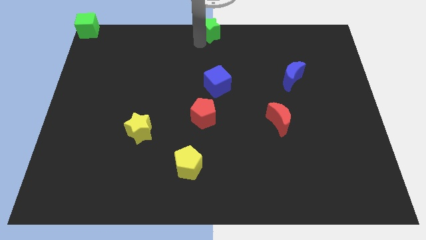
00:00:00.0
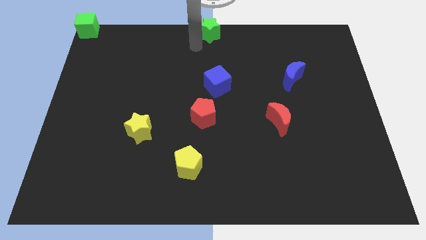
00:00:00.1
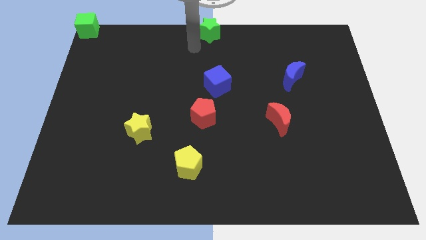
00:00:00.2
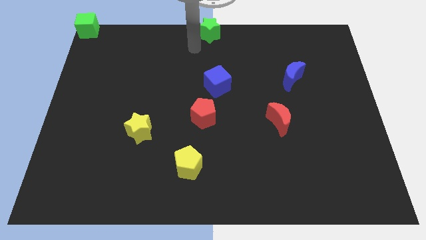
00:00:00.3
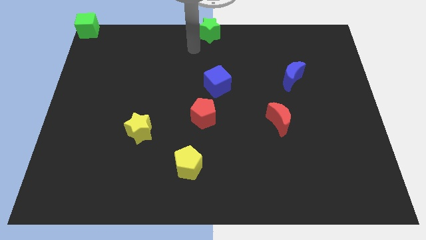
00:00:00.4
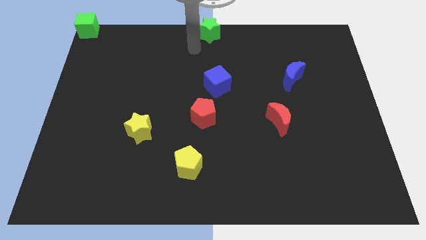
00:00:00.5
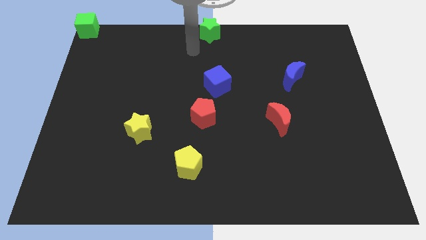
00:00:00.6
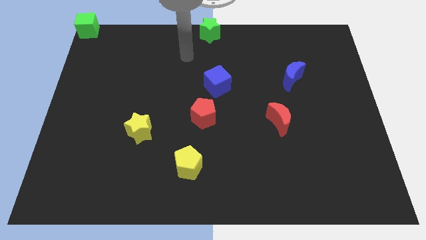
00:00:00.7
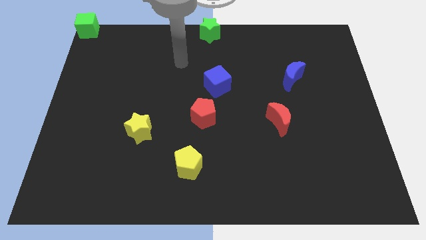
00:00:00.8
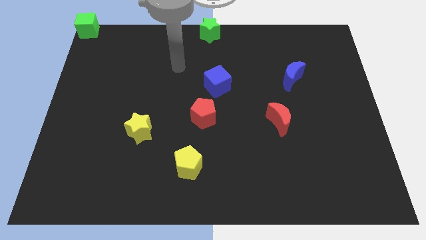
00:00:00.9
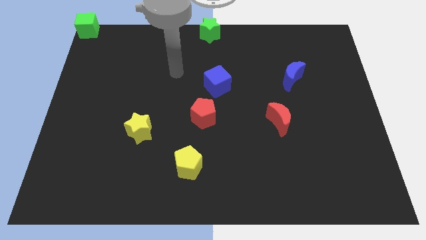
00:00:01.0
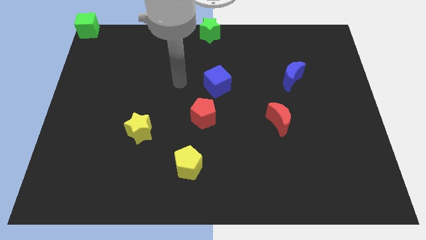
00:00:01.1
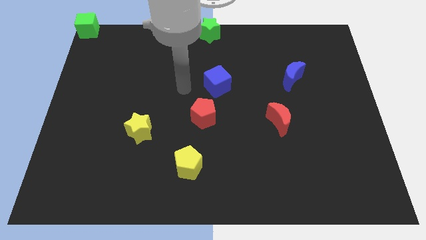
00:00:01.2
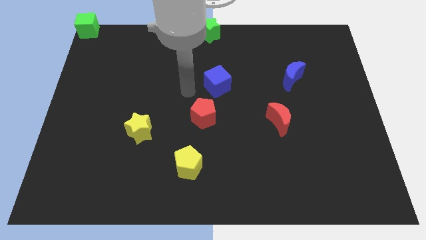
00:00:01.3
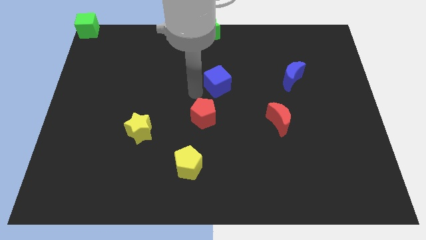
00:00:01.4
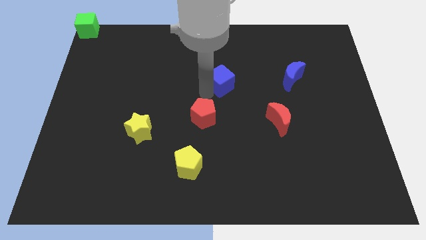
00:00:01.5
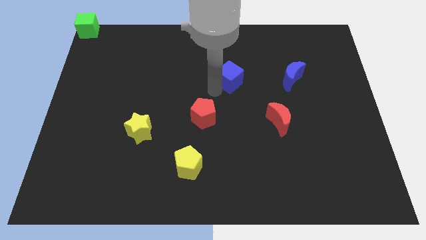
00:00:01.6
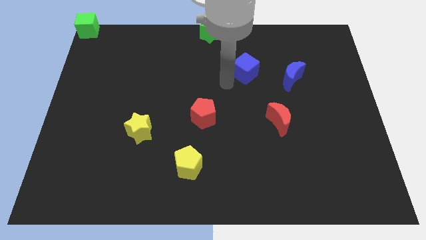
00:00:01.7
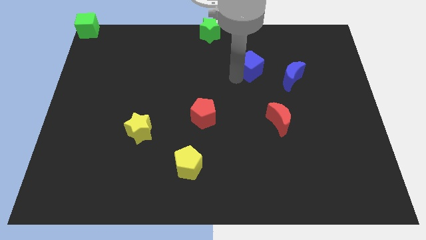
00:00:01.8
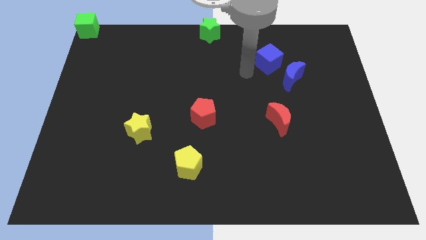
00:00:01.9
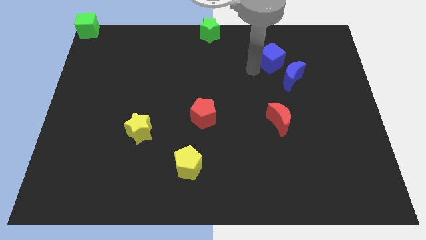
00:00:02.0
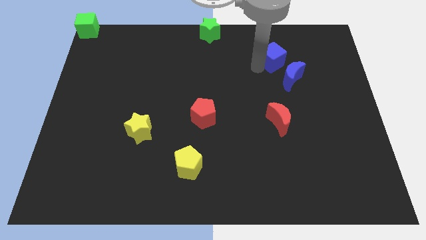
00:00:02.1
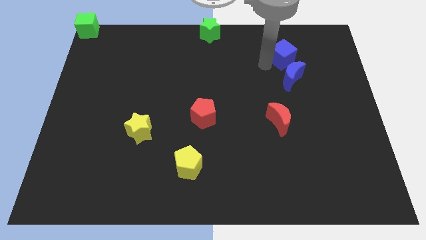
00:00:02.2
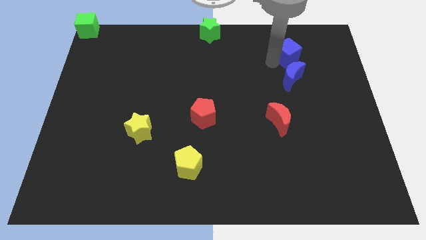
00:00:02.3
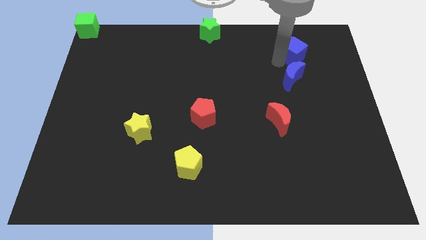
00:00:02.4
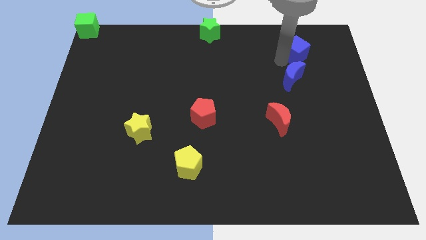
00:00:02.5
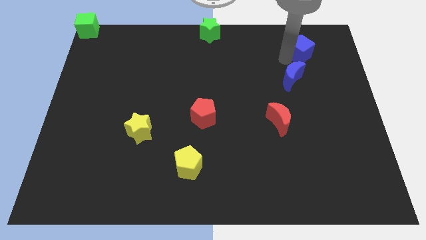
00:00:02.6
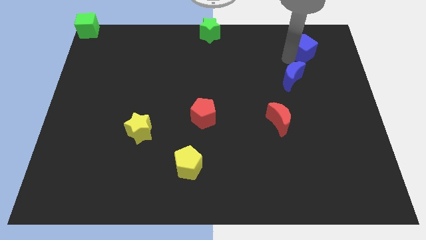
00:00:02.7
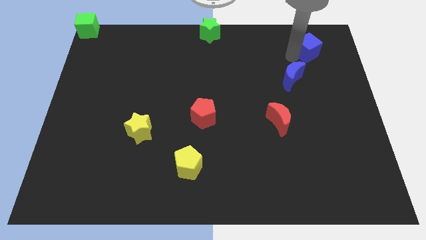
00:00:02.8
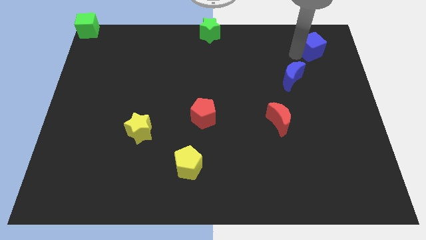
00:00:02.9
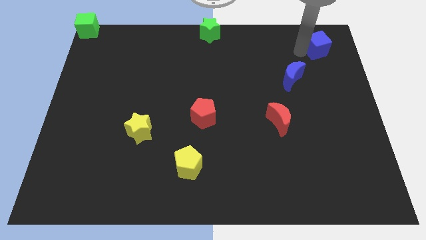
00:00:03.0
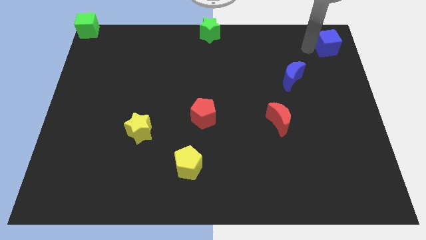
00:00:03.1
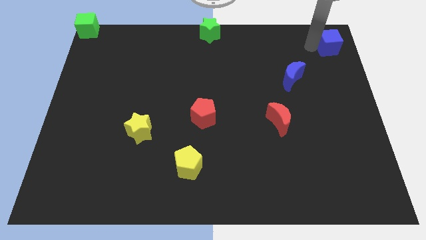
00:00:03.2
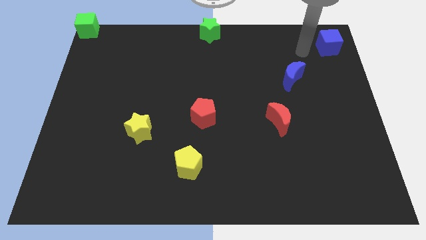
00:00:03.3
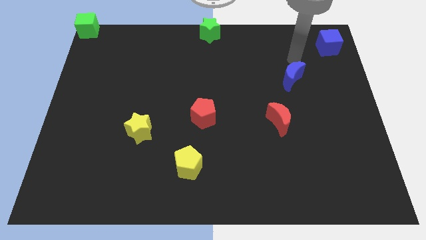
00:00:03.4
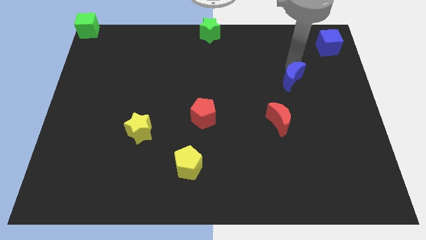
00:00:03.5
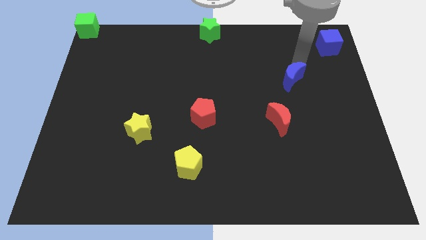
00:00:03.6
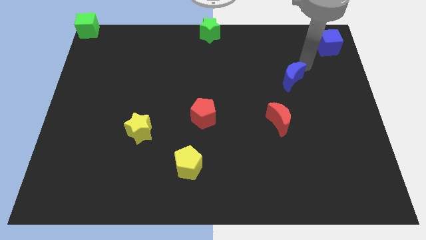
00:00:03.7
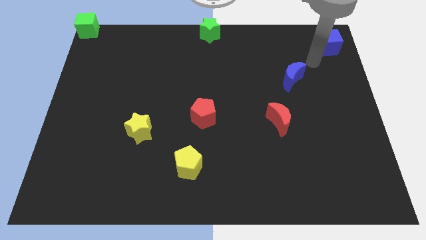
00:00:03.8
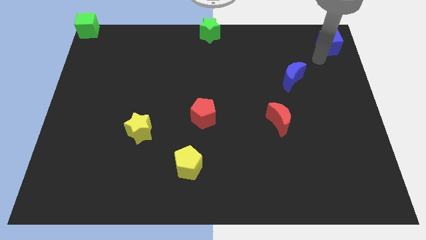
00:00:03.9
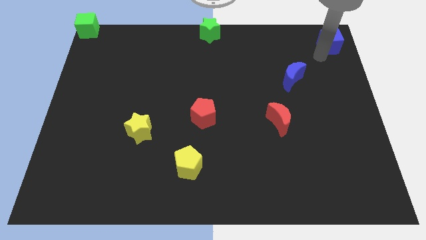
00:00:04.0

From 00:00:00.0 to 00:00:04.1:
move the blue cube away from red pentagon

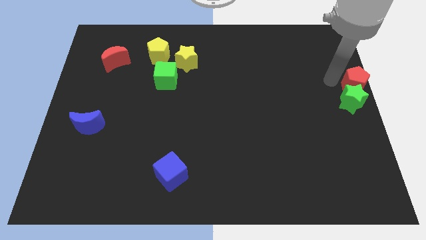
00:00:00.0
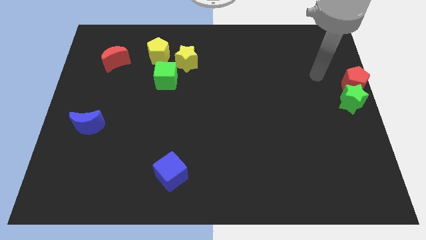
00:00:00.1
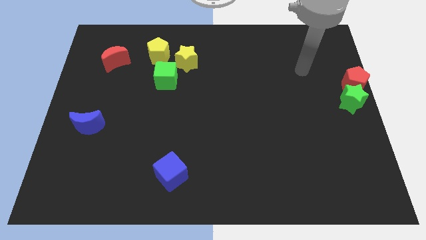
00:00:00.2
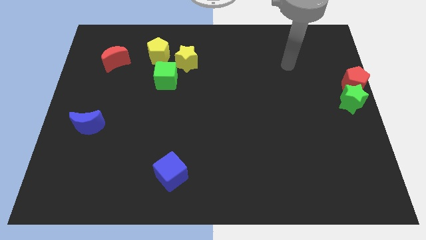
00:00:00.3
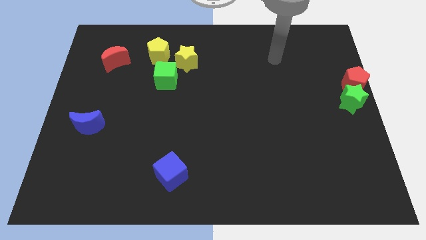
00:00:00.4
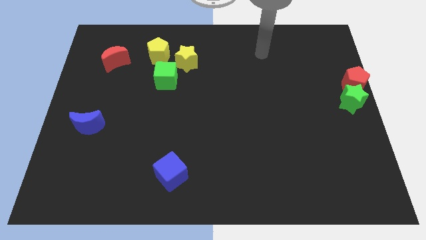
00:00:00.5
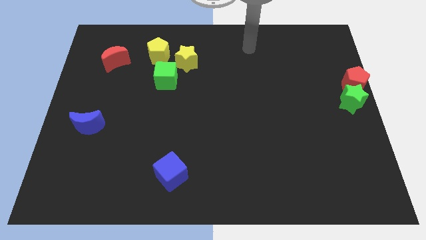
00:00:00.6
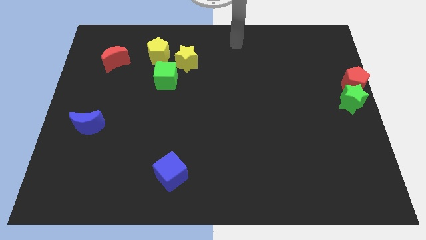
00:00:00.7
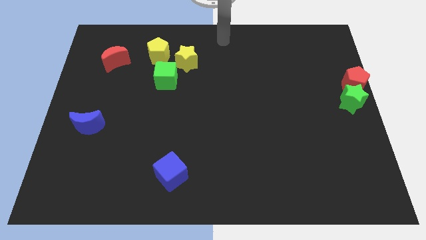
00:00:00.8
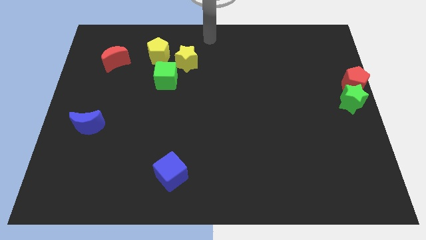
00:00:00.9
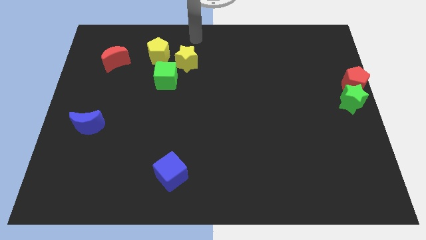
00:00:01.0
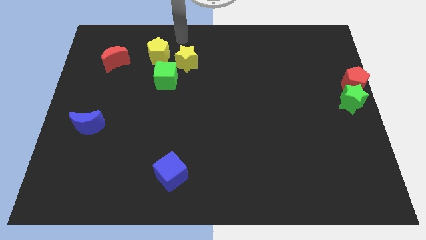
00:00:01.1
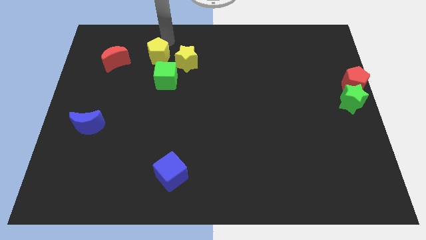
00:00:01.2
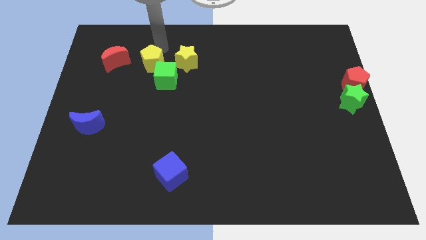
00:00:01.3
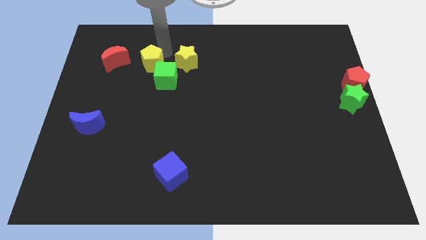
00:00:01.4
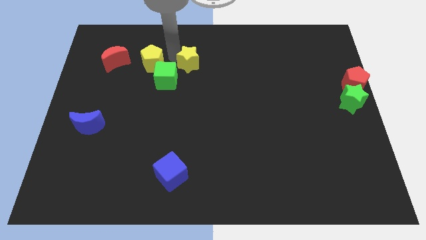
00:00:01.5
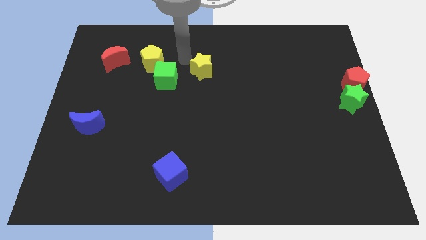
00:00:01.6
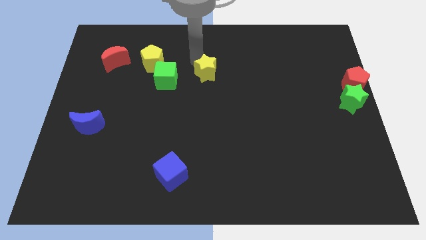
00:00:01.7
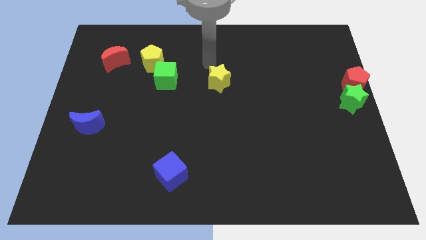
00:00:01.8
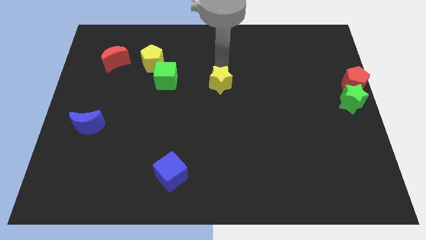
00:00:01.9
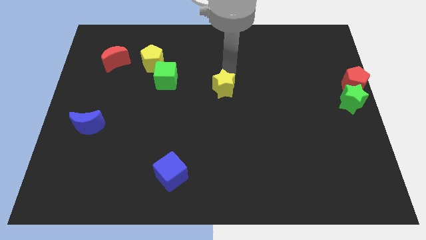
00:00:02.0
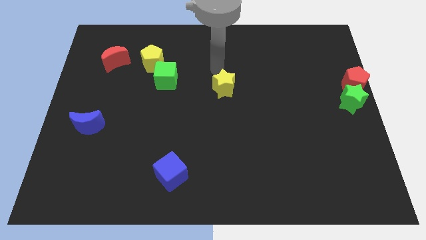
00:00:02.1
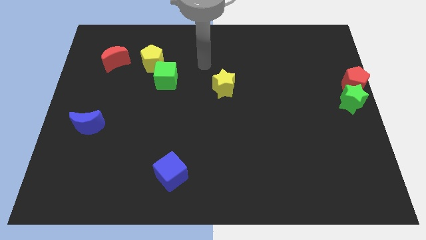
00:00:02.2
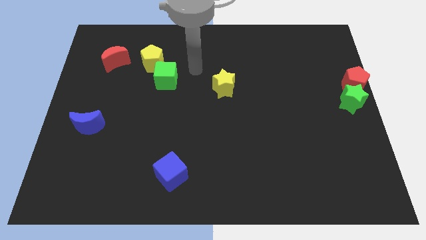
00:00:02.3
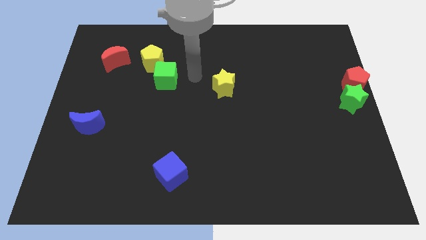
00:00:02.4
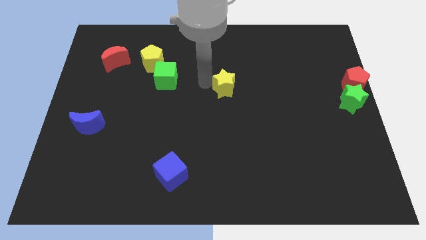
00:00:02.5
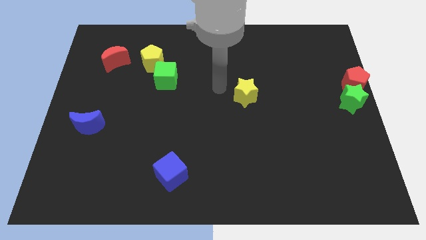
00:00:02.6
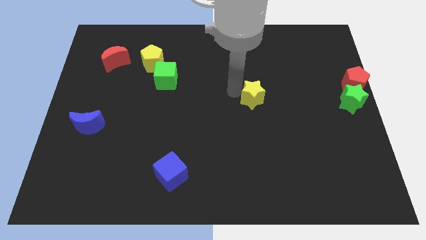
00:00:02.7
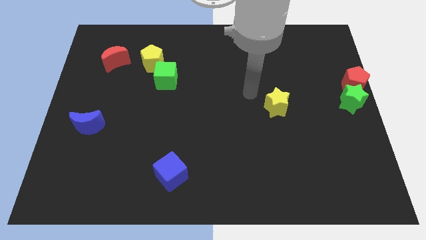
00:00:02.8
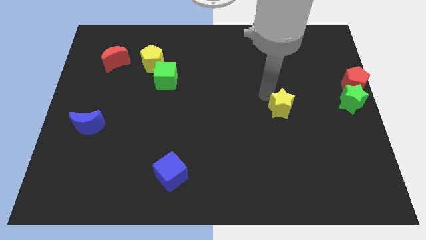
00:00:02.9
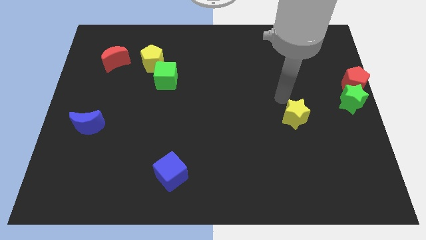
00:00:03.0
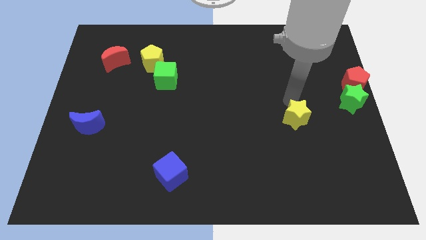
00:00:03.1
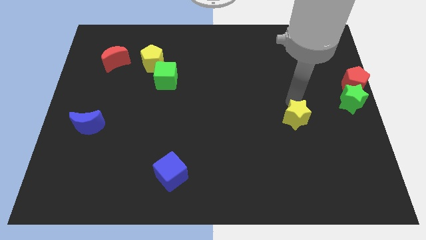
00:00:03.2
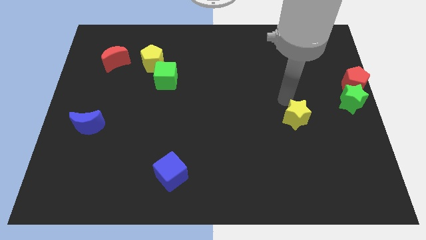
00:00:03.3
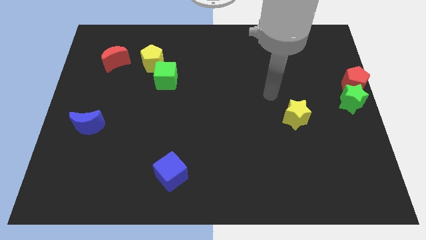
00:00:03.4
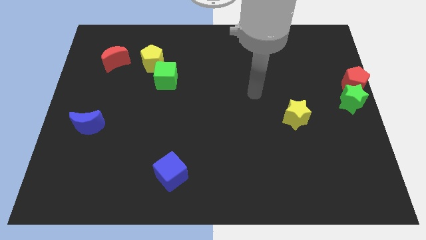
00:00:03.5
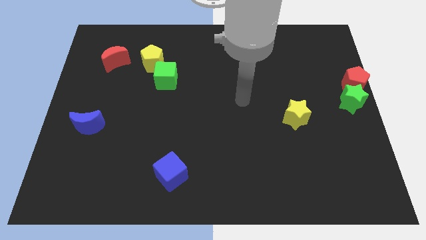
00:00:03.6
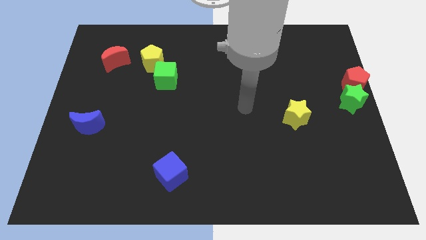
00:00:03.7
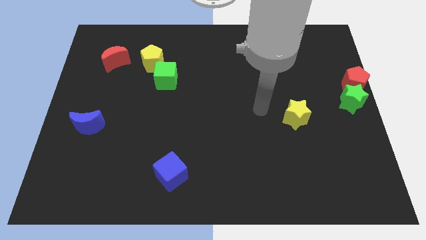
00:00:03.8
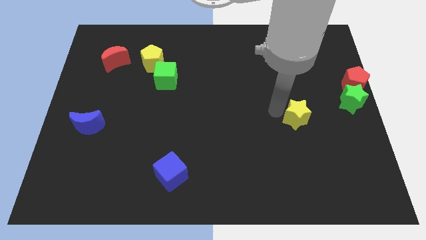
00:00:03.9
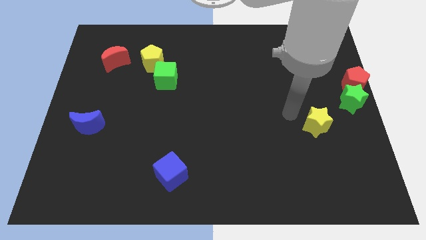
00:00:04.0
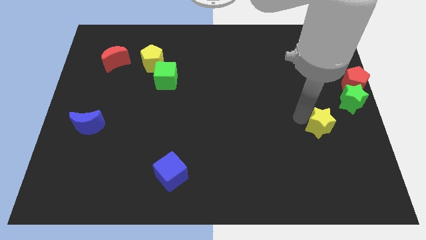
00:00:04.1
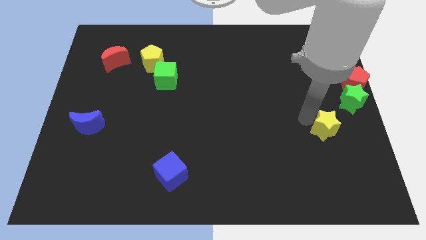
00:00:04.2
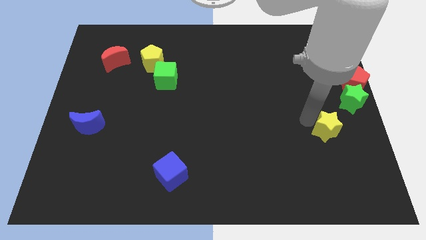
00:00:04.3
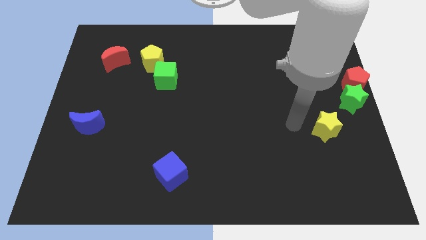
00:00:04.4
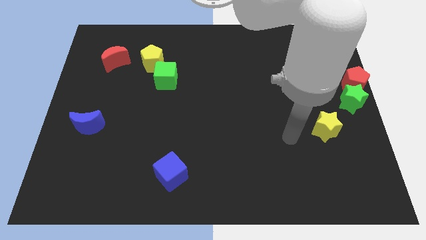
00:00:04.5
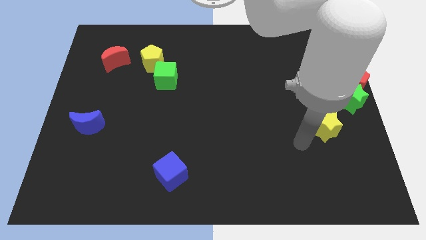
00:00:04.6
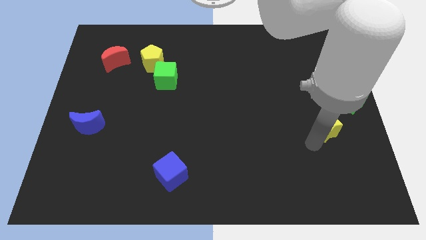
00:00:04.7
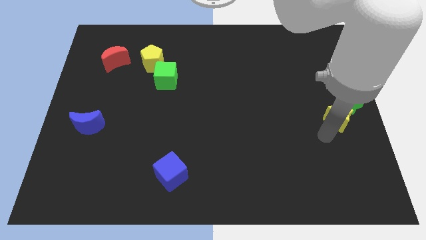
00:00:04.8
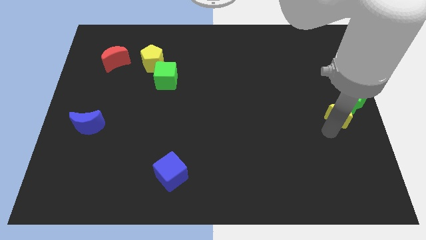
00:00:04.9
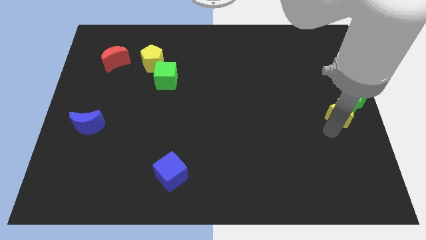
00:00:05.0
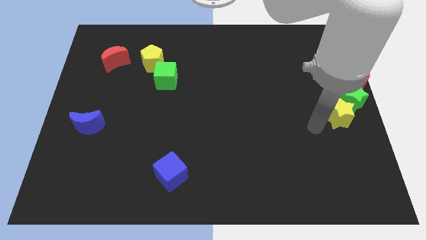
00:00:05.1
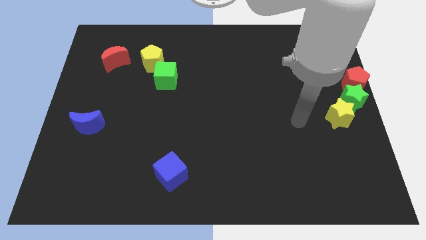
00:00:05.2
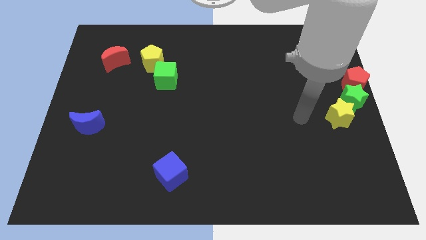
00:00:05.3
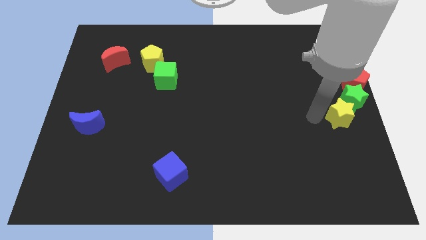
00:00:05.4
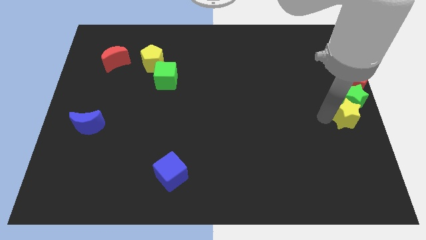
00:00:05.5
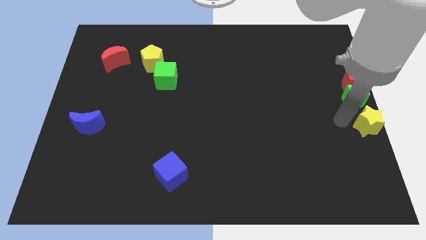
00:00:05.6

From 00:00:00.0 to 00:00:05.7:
push the yellow star to the right center of the board
